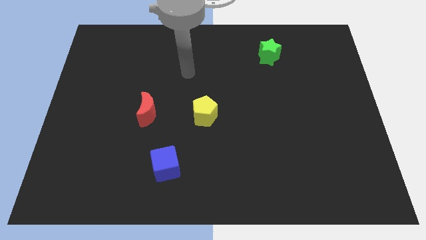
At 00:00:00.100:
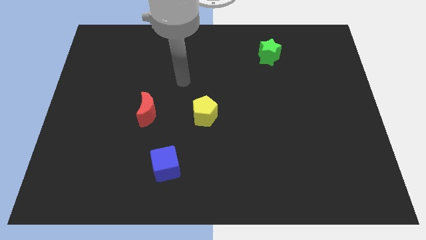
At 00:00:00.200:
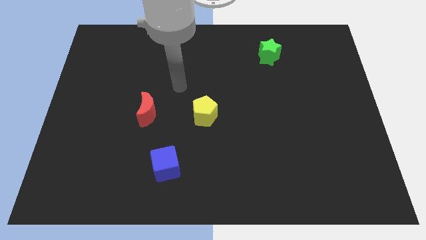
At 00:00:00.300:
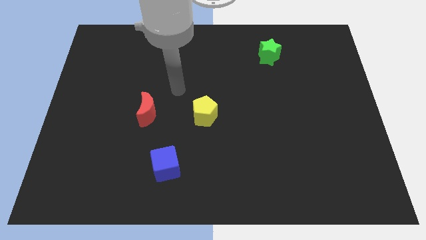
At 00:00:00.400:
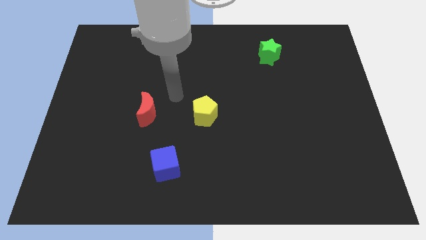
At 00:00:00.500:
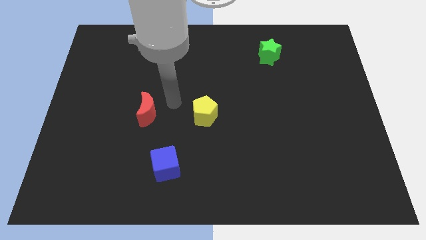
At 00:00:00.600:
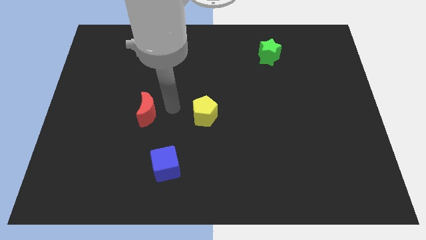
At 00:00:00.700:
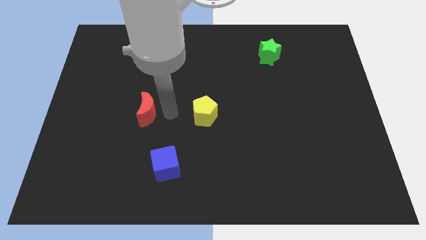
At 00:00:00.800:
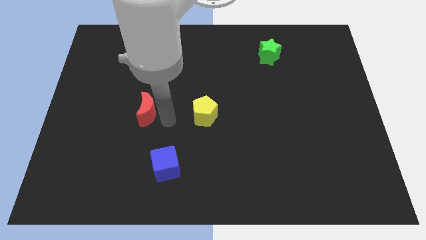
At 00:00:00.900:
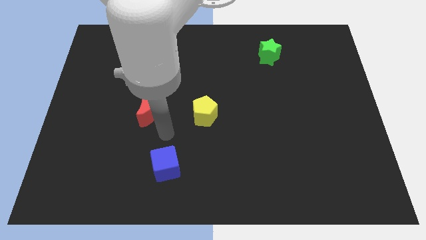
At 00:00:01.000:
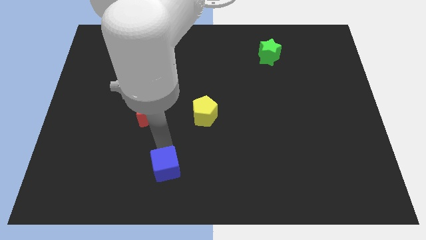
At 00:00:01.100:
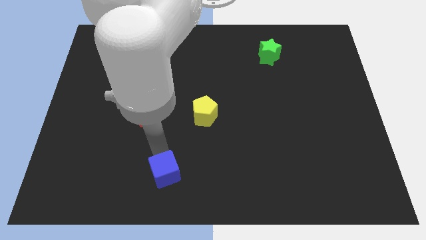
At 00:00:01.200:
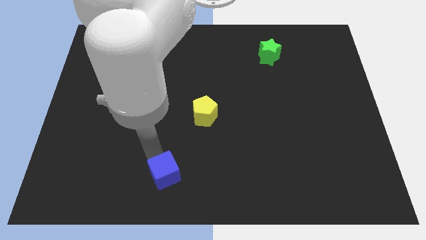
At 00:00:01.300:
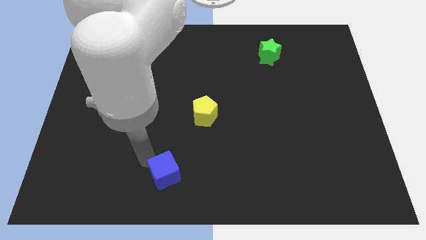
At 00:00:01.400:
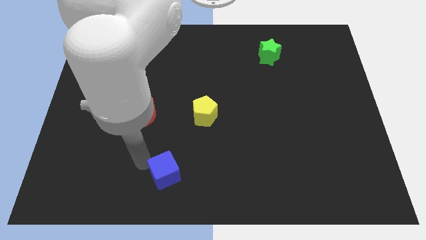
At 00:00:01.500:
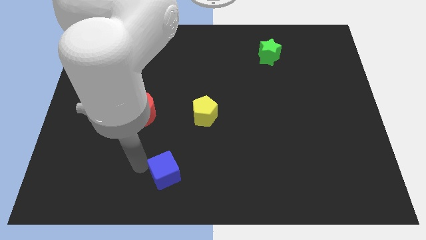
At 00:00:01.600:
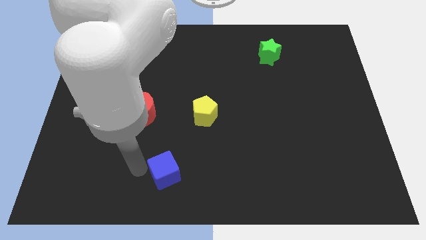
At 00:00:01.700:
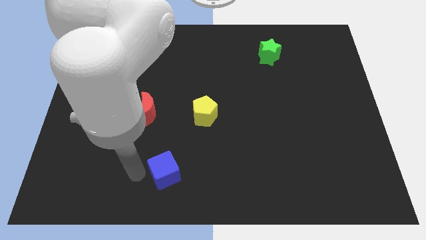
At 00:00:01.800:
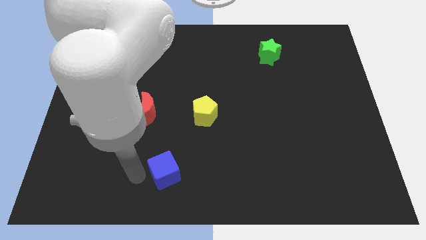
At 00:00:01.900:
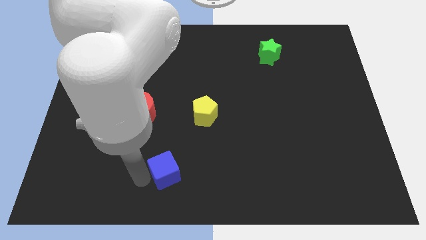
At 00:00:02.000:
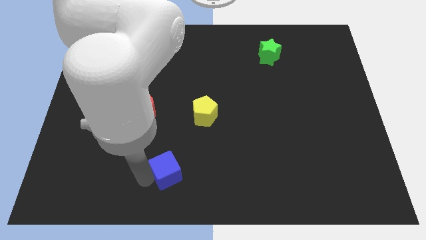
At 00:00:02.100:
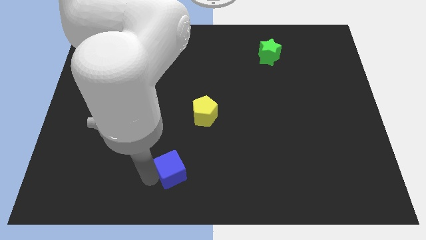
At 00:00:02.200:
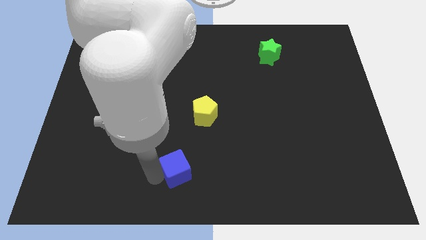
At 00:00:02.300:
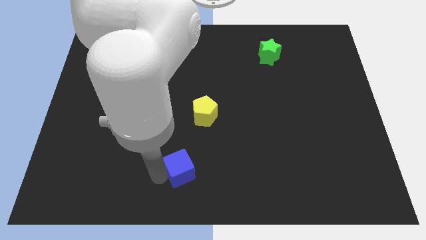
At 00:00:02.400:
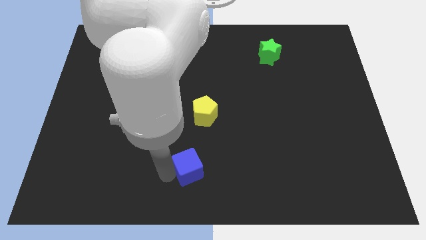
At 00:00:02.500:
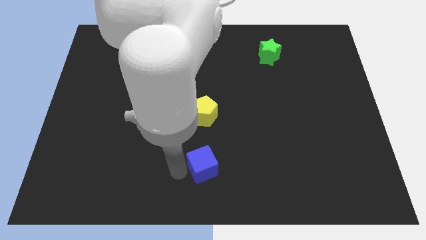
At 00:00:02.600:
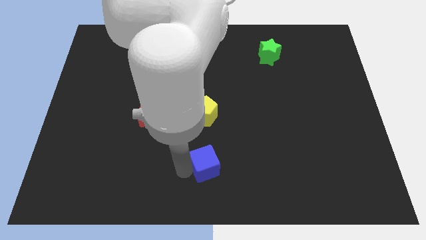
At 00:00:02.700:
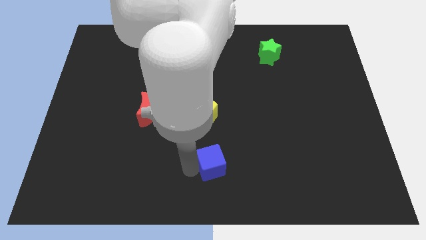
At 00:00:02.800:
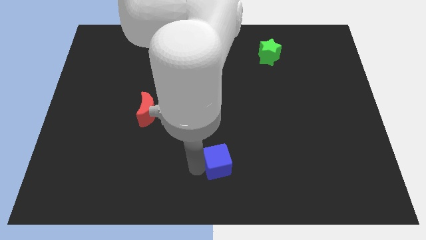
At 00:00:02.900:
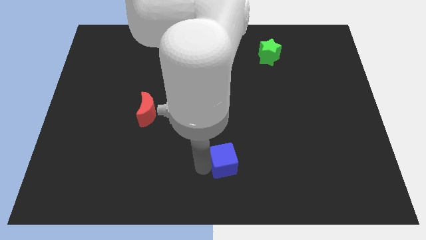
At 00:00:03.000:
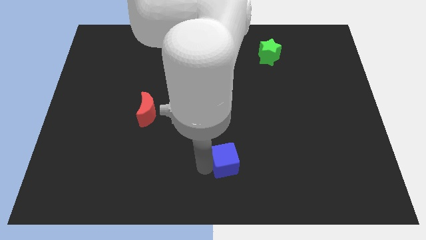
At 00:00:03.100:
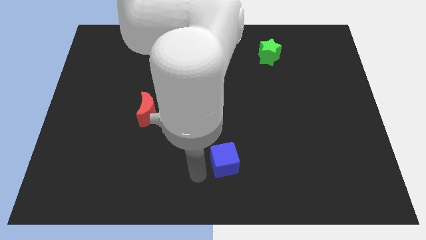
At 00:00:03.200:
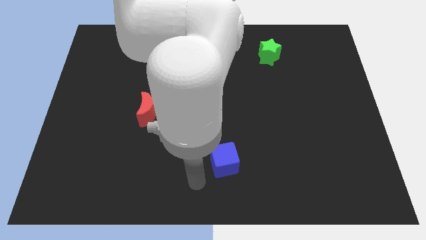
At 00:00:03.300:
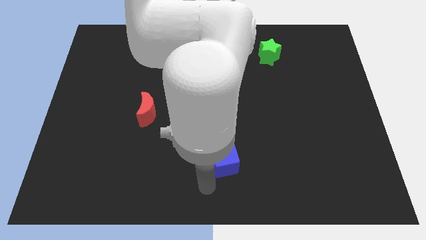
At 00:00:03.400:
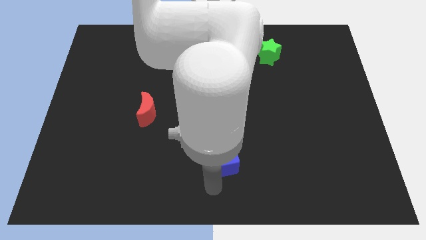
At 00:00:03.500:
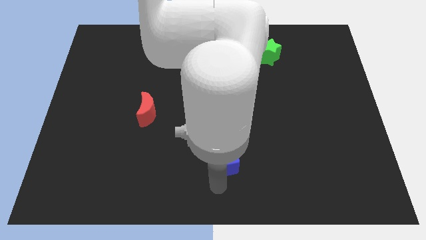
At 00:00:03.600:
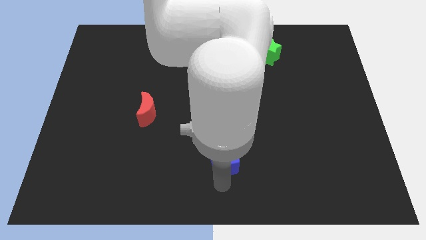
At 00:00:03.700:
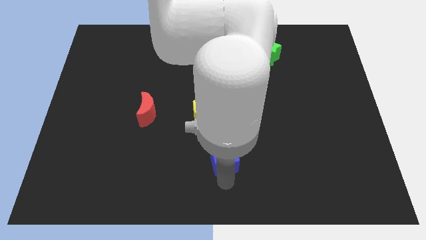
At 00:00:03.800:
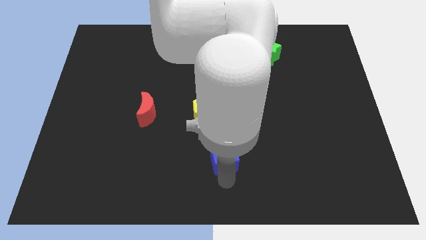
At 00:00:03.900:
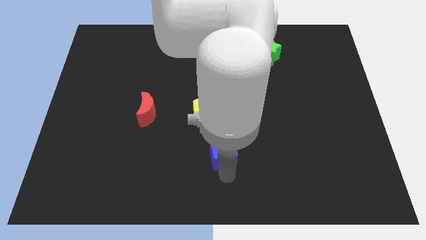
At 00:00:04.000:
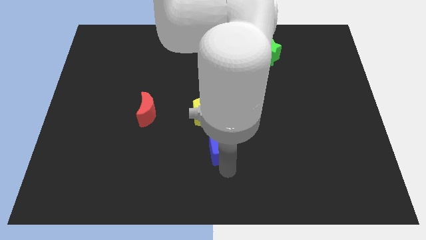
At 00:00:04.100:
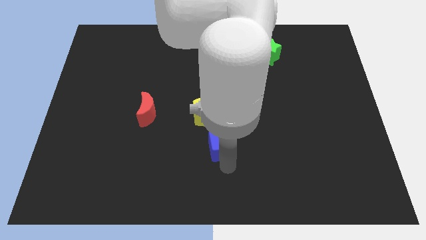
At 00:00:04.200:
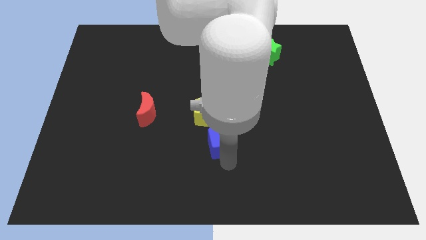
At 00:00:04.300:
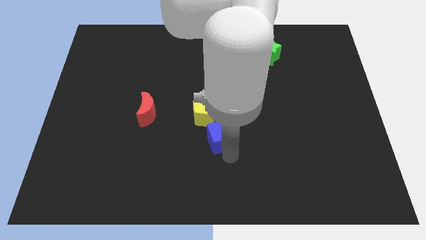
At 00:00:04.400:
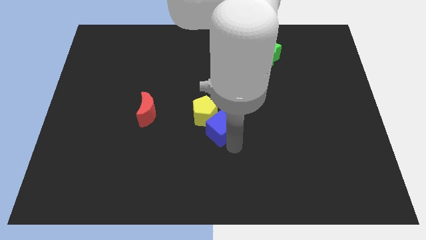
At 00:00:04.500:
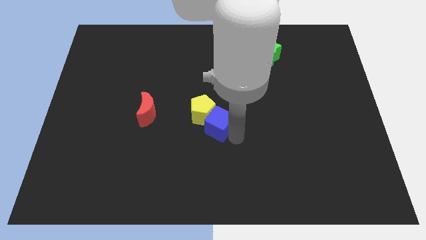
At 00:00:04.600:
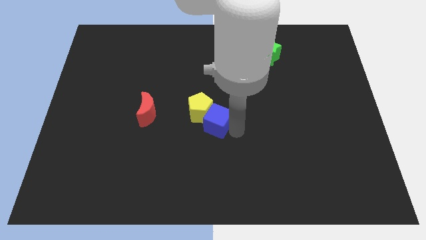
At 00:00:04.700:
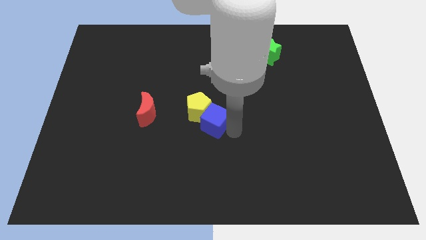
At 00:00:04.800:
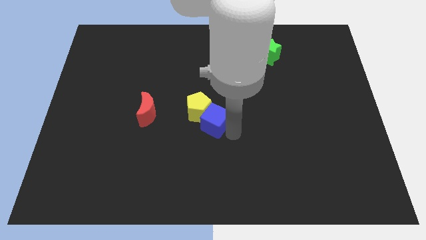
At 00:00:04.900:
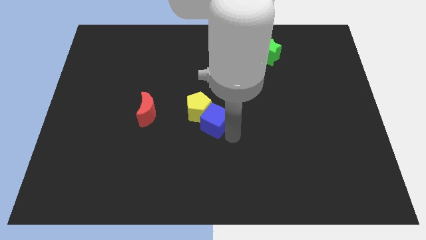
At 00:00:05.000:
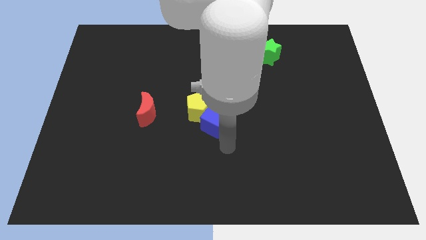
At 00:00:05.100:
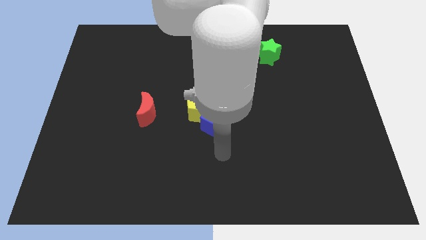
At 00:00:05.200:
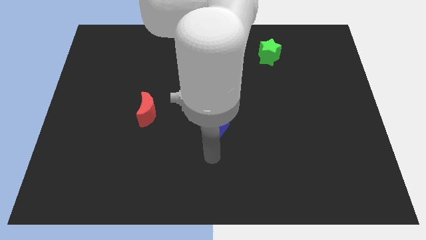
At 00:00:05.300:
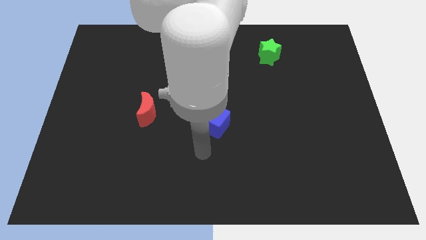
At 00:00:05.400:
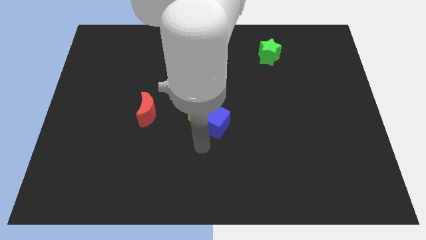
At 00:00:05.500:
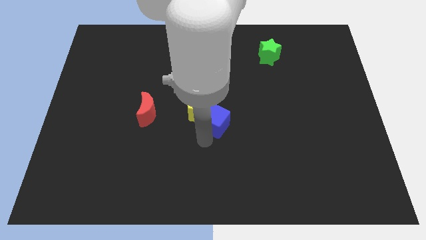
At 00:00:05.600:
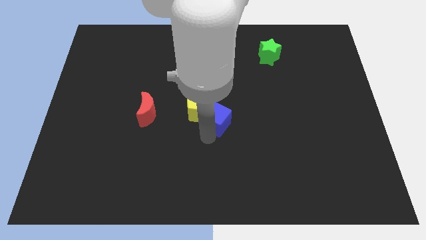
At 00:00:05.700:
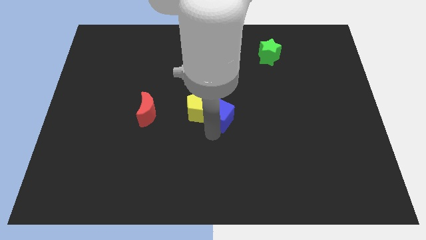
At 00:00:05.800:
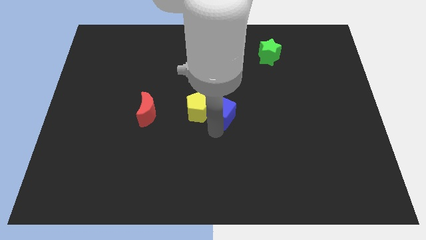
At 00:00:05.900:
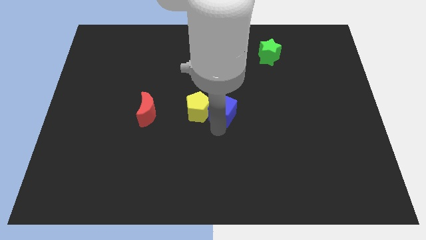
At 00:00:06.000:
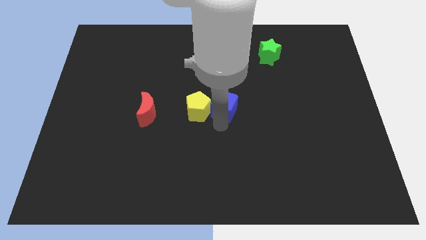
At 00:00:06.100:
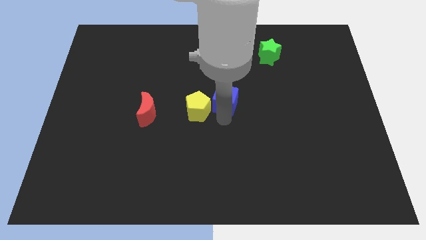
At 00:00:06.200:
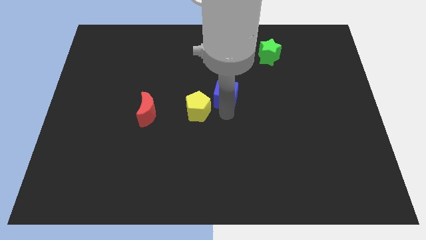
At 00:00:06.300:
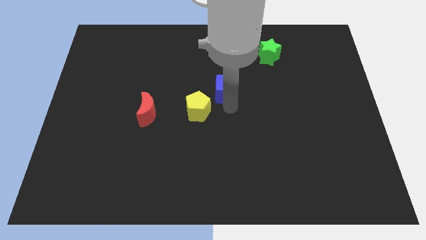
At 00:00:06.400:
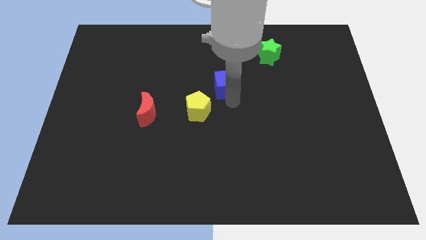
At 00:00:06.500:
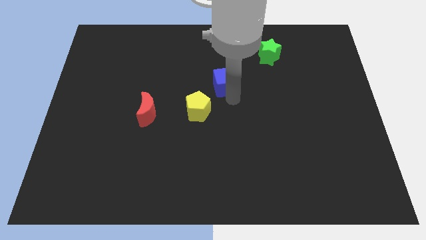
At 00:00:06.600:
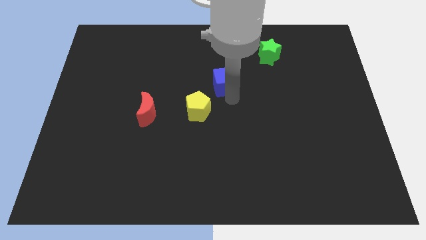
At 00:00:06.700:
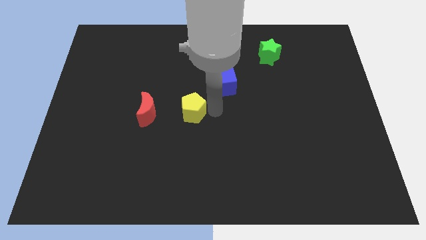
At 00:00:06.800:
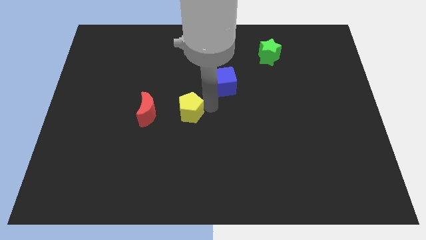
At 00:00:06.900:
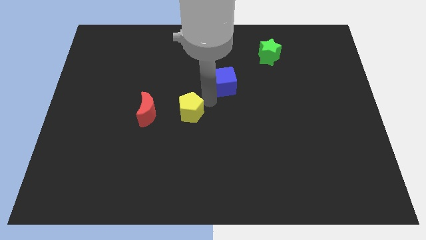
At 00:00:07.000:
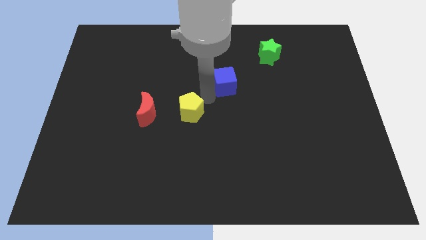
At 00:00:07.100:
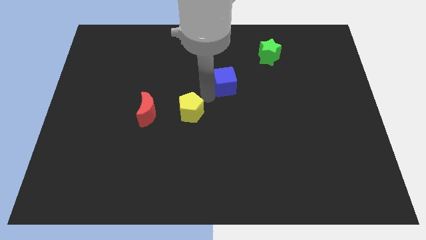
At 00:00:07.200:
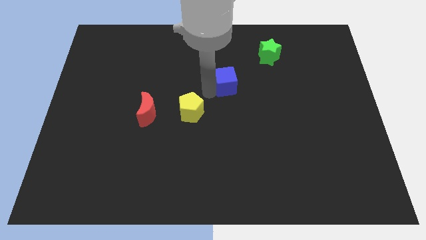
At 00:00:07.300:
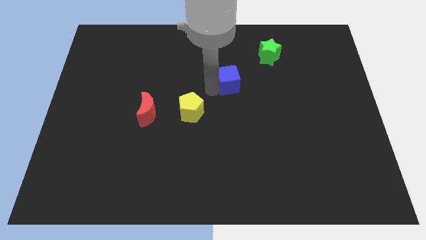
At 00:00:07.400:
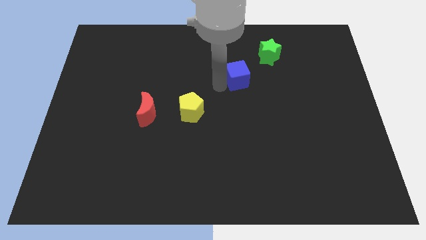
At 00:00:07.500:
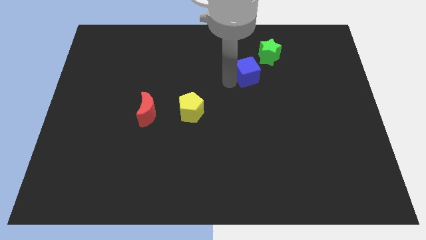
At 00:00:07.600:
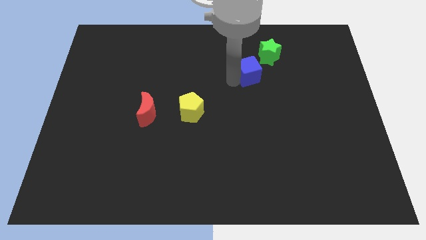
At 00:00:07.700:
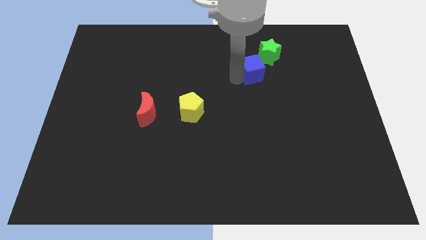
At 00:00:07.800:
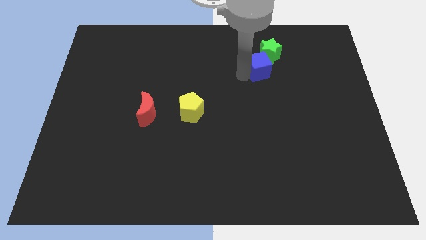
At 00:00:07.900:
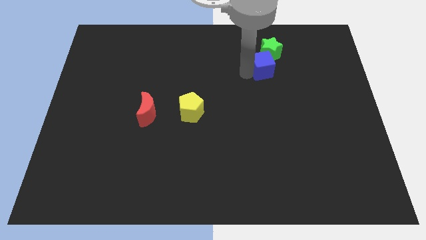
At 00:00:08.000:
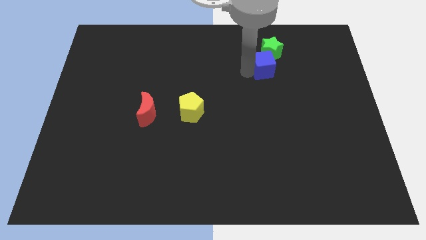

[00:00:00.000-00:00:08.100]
move the blue cube towards the green star

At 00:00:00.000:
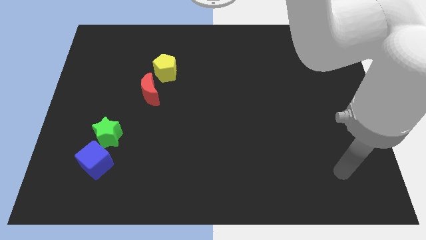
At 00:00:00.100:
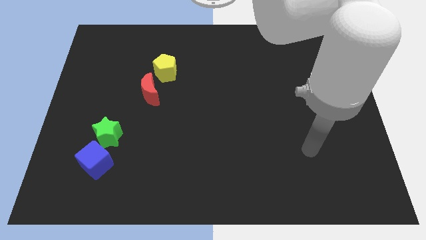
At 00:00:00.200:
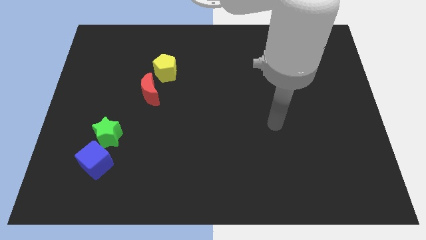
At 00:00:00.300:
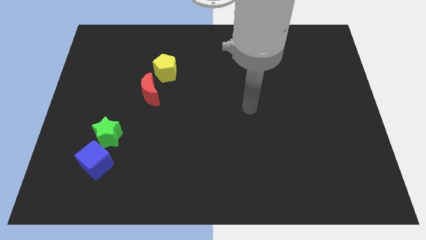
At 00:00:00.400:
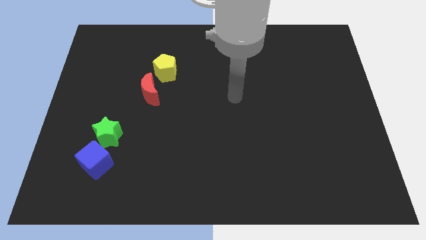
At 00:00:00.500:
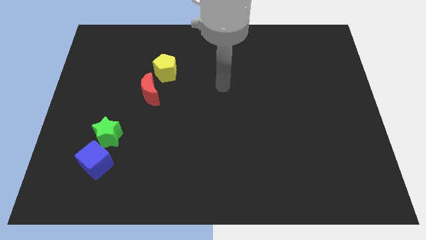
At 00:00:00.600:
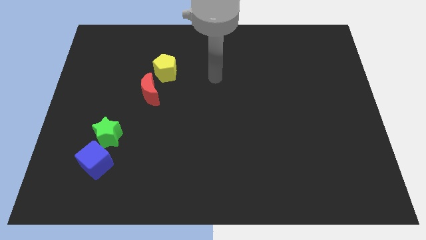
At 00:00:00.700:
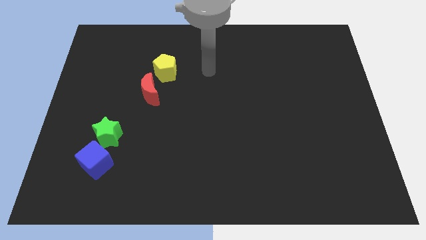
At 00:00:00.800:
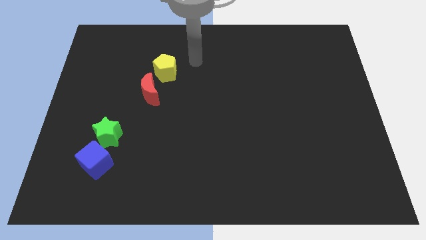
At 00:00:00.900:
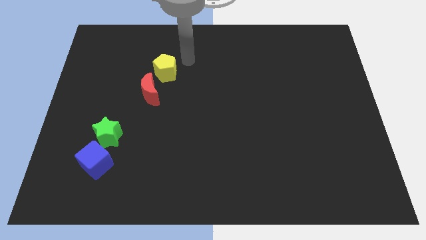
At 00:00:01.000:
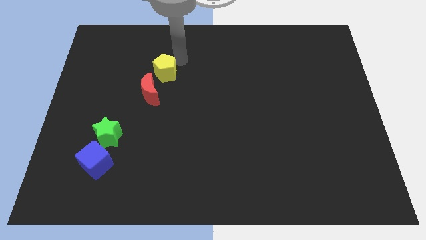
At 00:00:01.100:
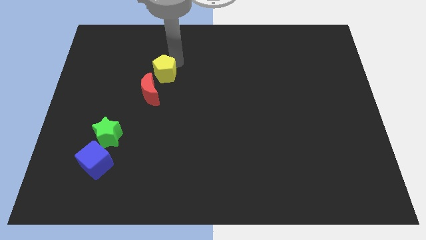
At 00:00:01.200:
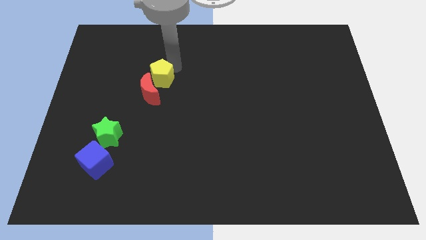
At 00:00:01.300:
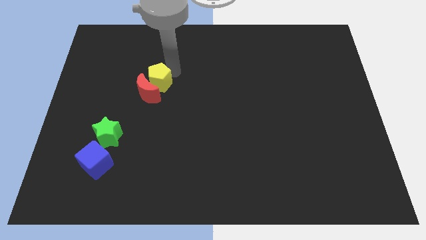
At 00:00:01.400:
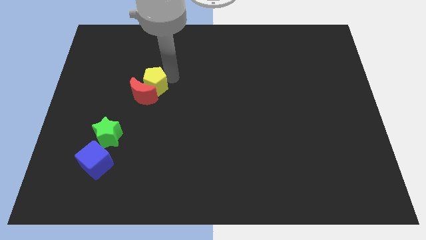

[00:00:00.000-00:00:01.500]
put the yellow block close to the moon
